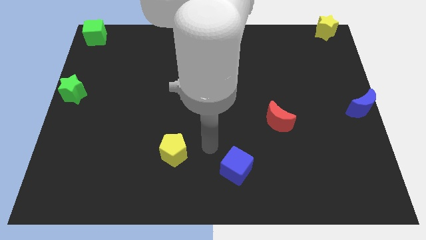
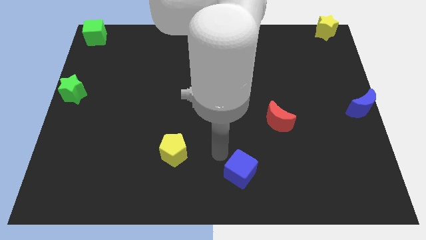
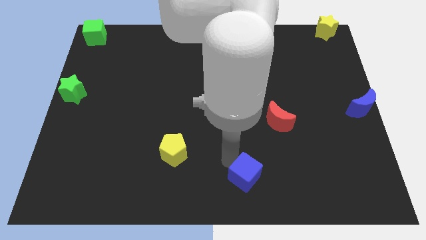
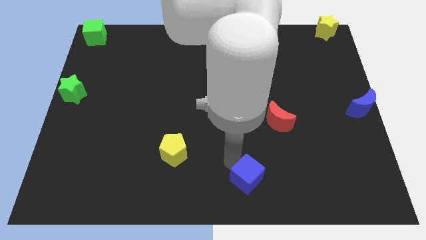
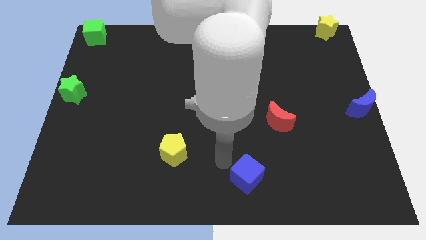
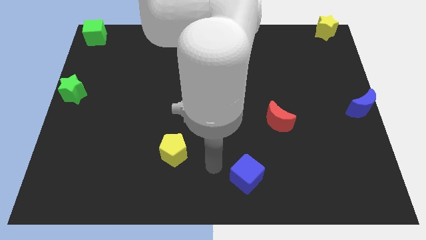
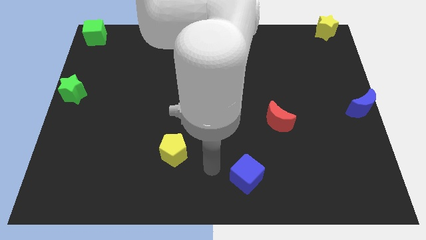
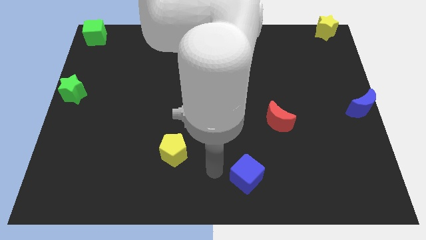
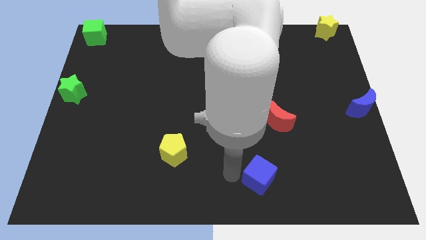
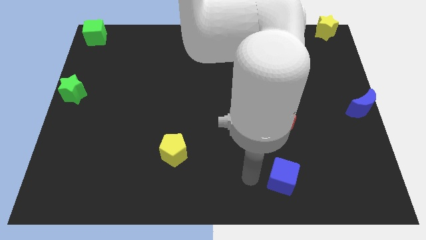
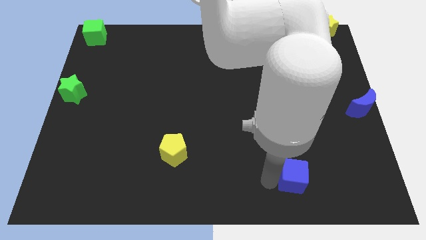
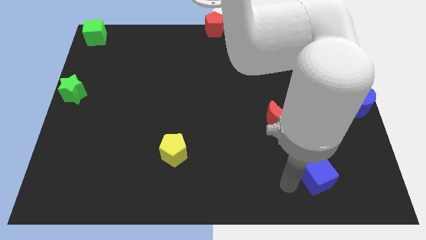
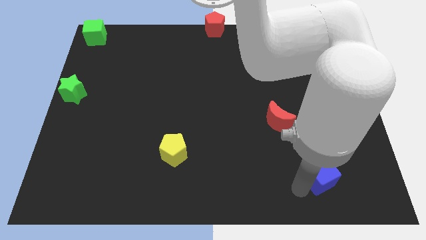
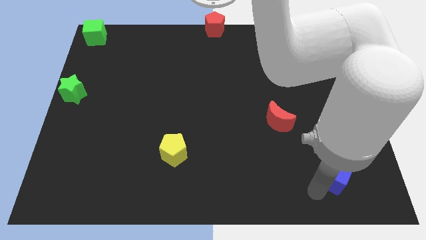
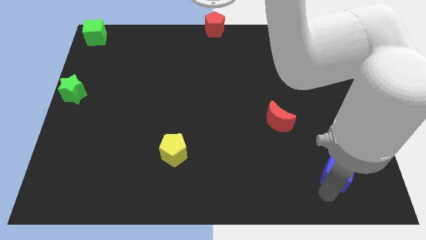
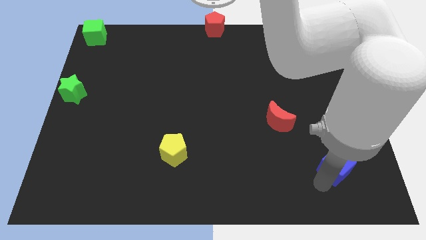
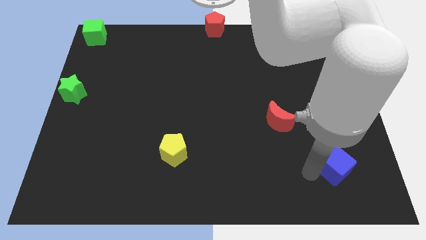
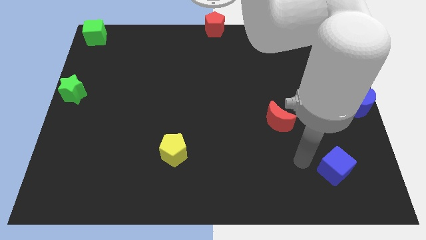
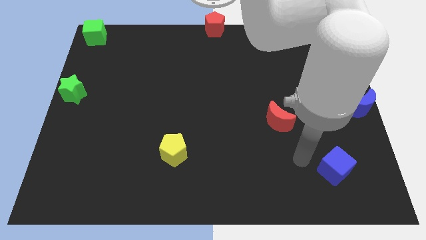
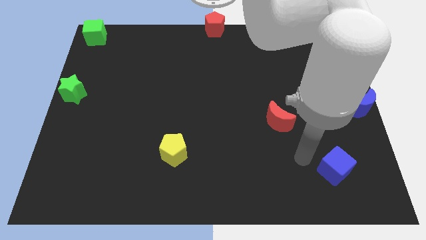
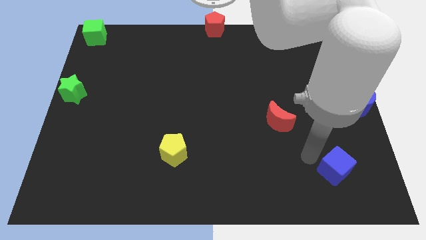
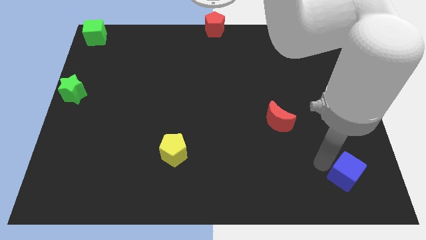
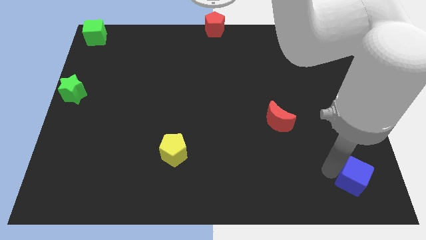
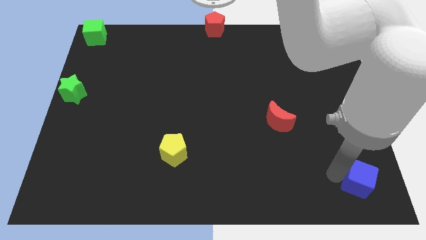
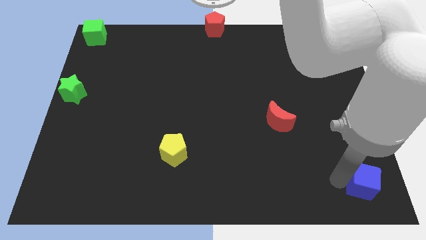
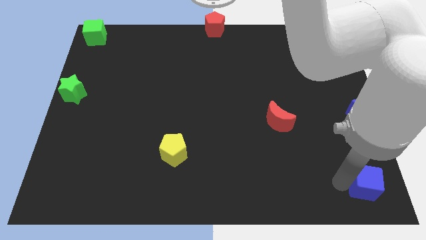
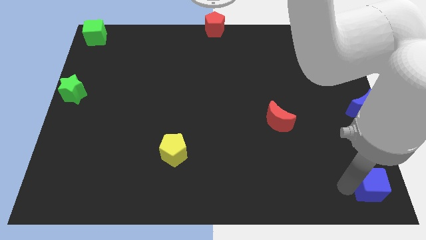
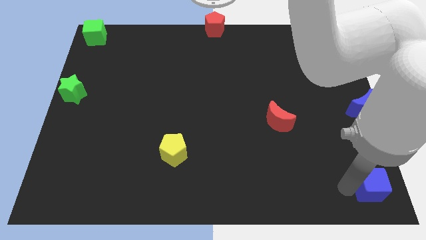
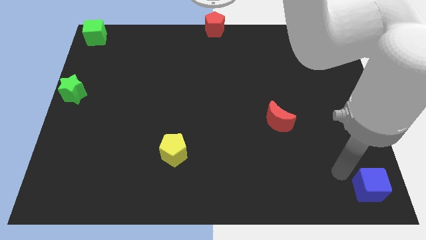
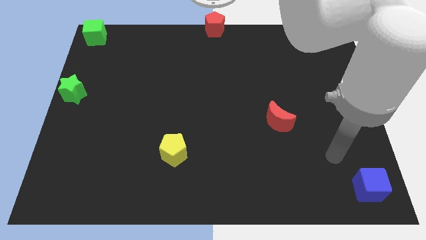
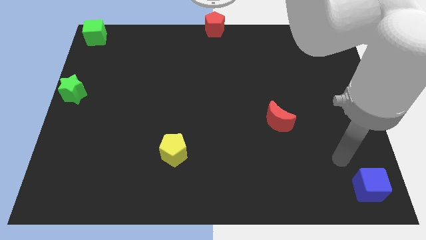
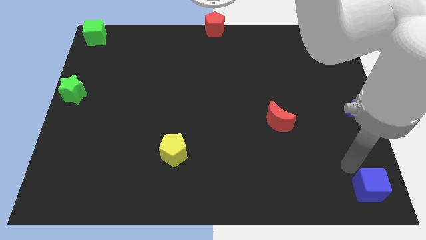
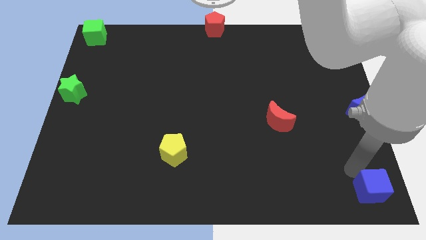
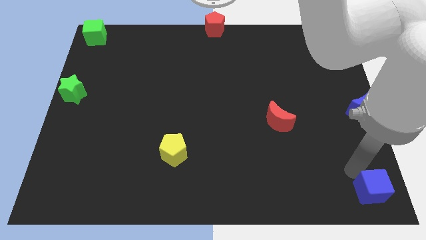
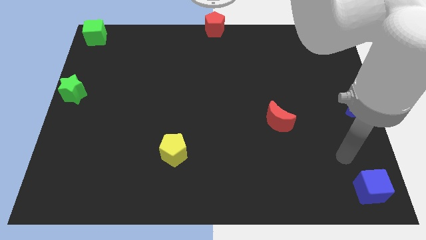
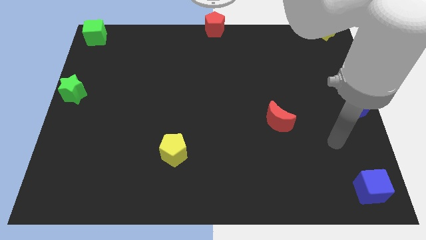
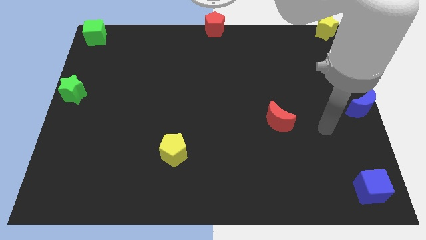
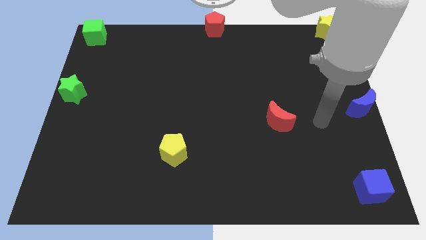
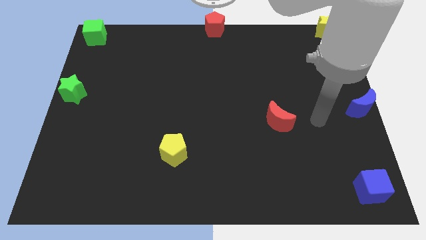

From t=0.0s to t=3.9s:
push the blue cube at the bottom right corner

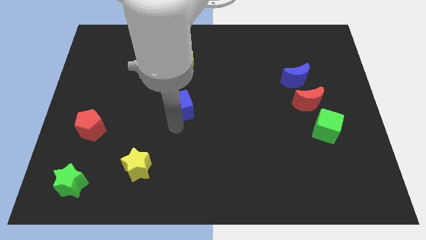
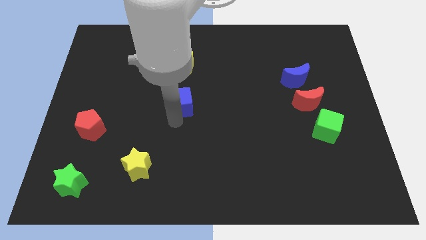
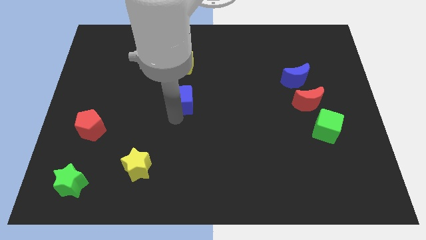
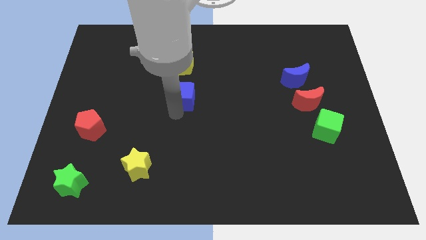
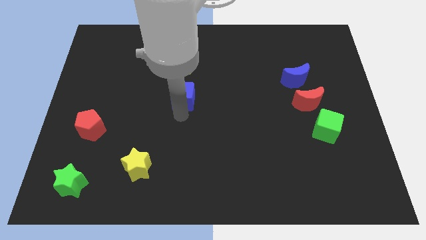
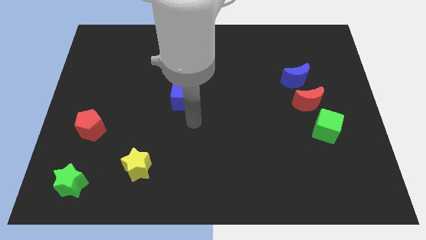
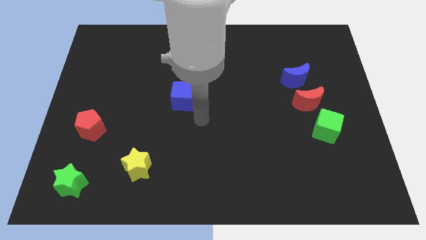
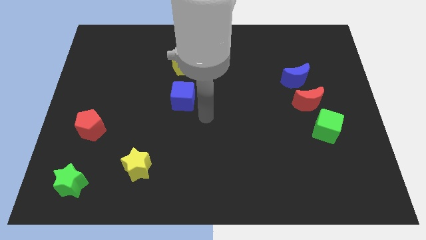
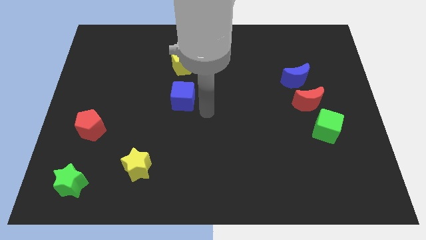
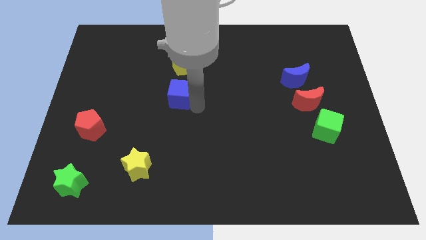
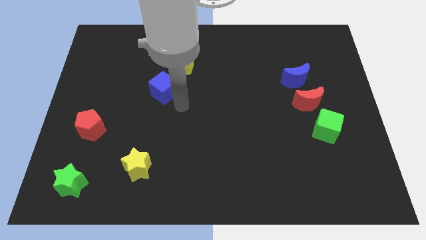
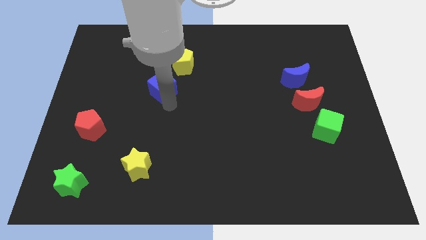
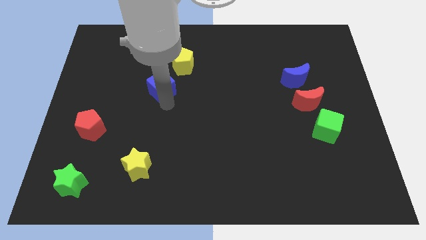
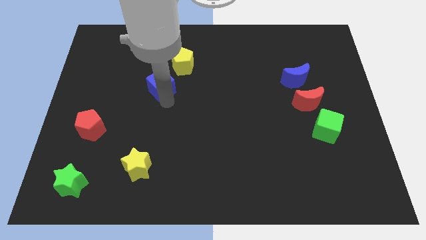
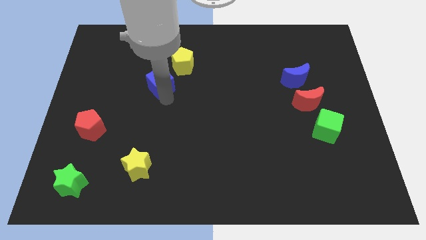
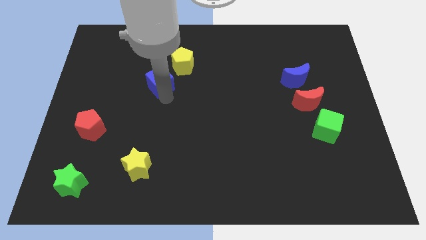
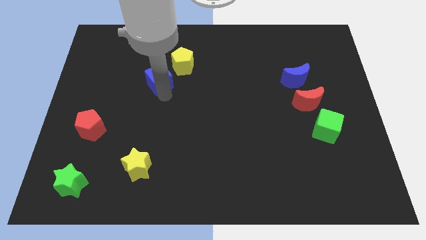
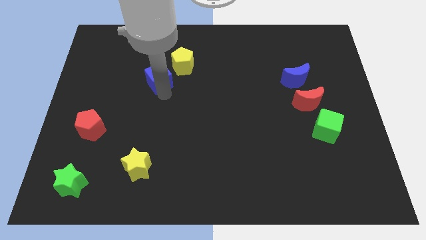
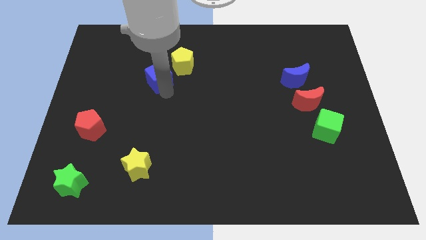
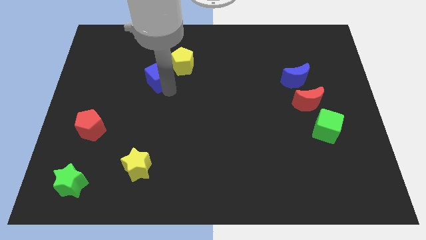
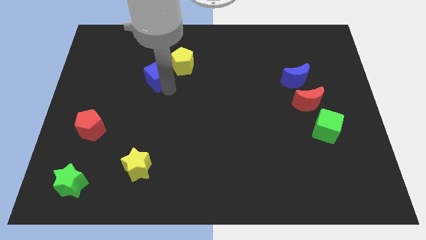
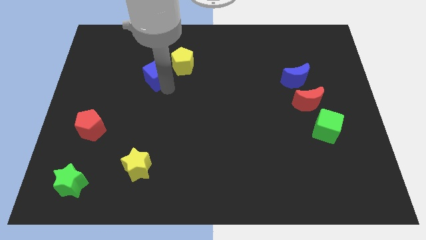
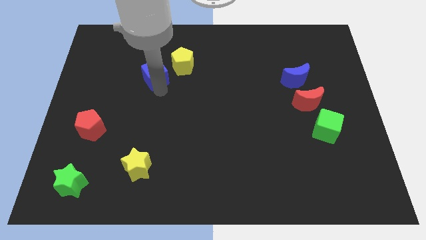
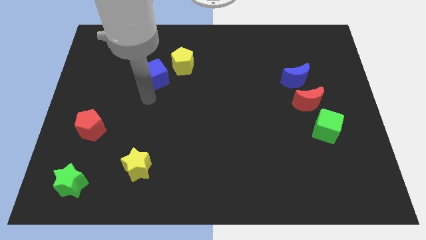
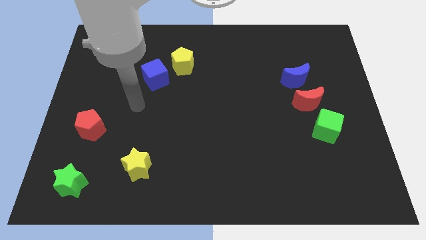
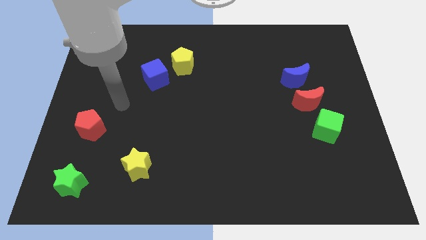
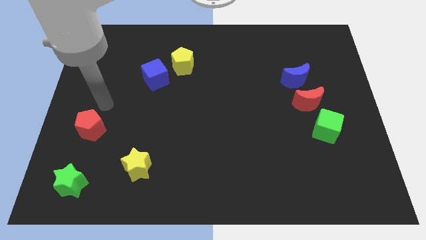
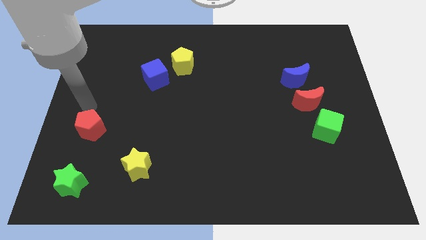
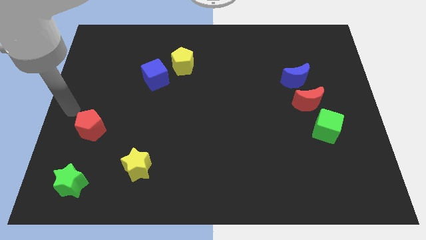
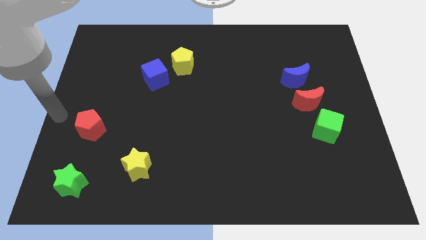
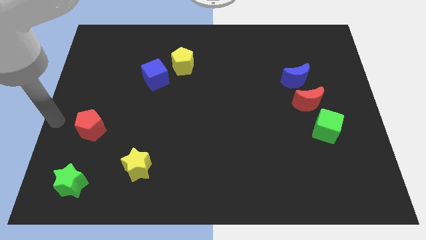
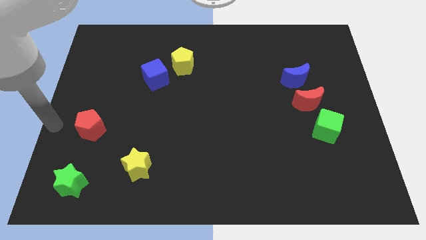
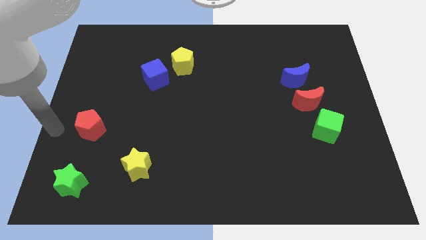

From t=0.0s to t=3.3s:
move the blue cube opposite to the yellow pentagon

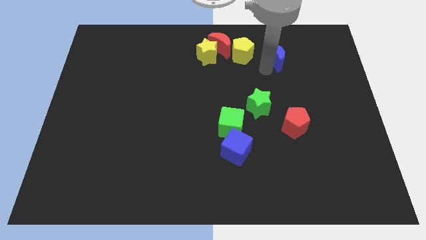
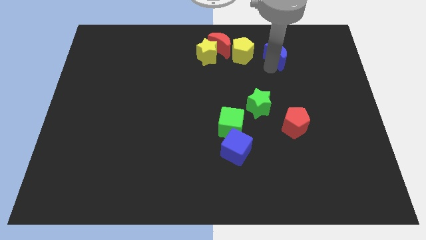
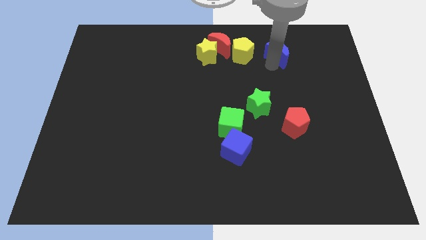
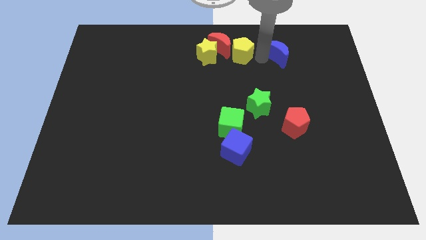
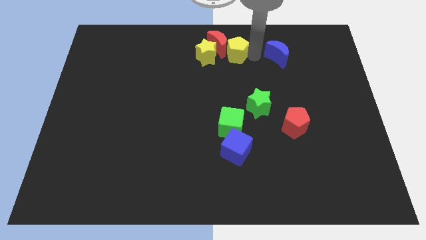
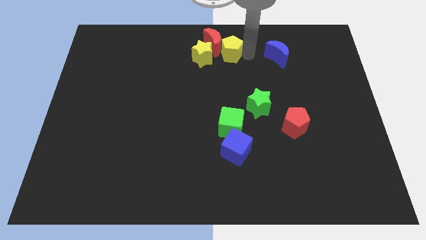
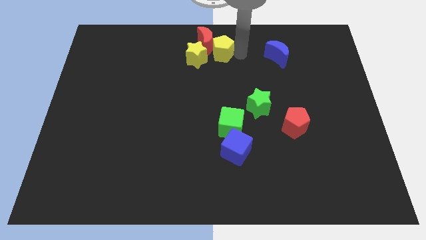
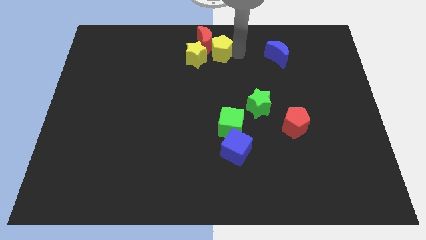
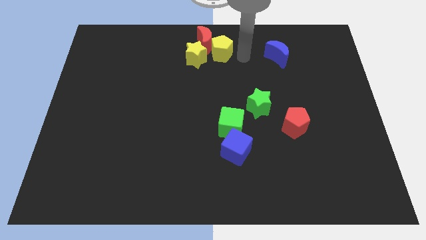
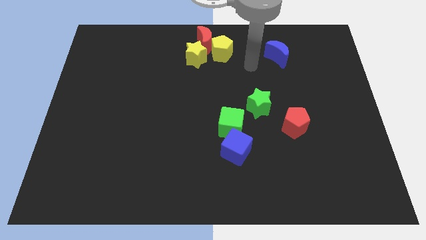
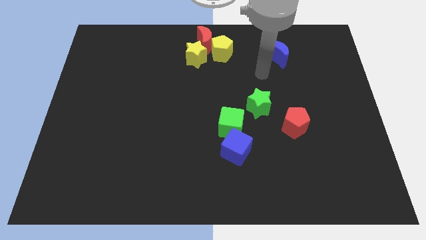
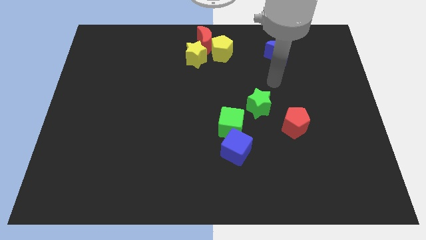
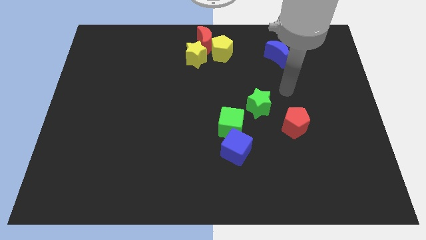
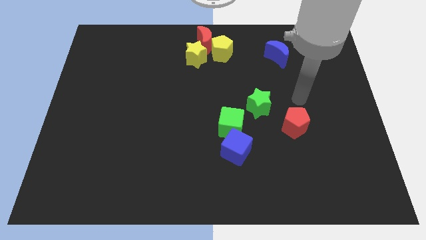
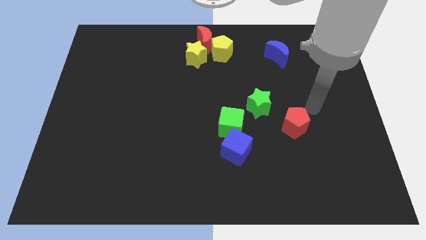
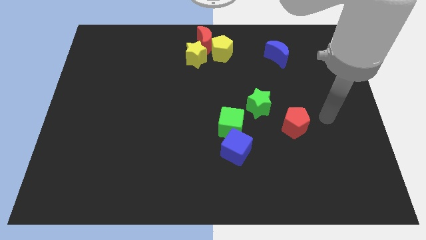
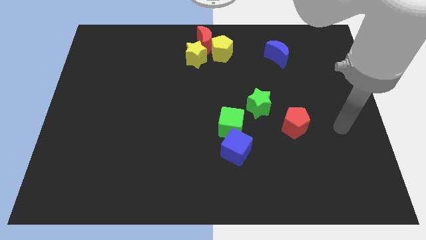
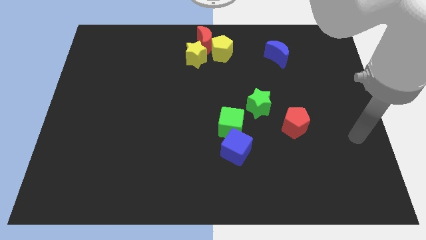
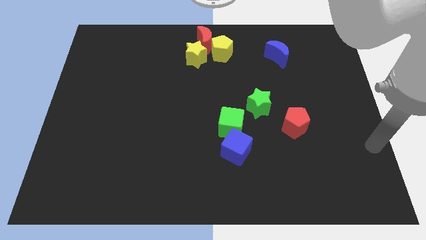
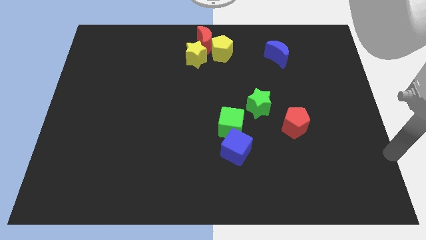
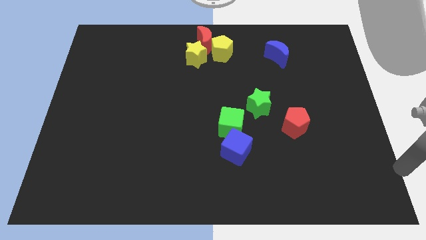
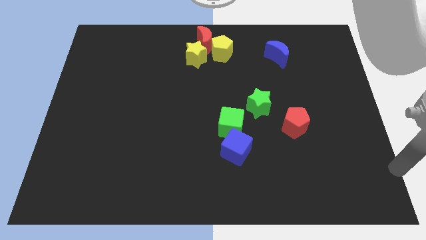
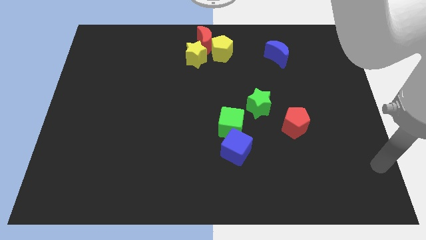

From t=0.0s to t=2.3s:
push the yellow pentagon into the red moon and yellow star
